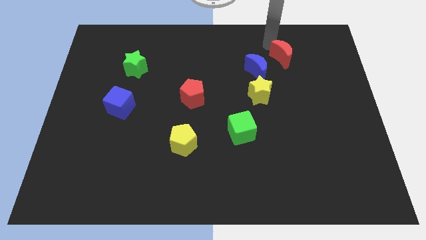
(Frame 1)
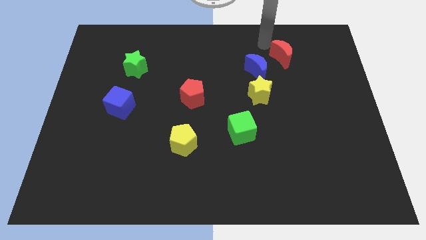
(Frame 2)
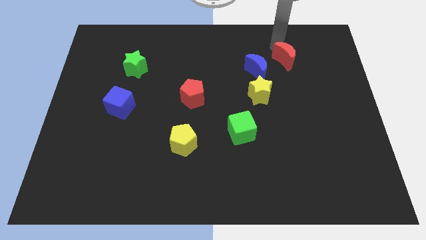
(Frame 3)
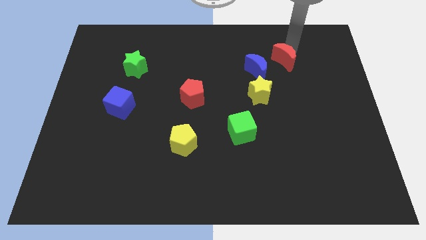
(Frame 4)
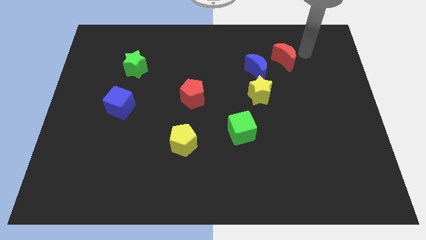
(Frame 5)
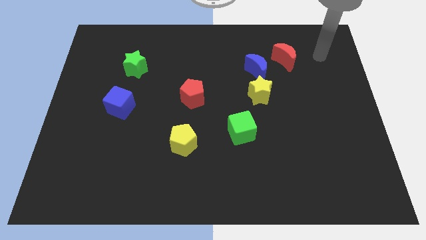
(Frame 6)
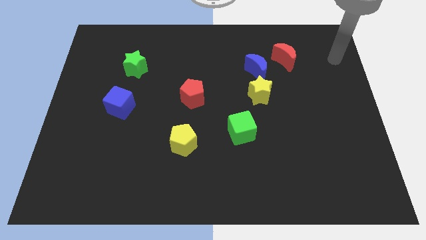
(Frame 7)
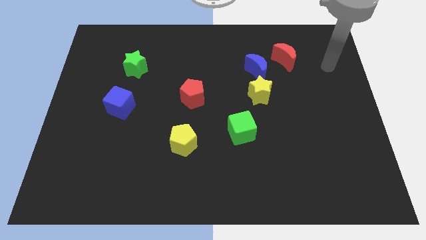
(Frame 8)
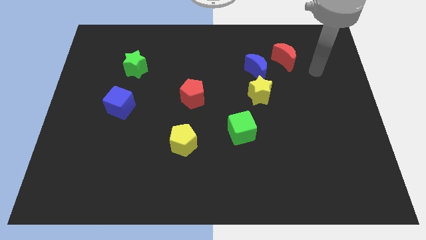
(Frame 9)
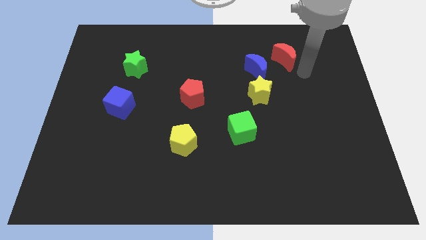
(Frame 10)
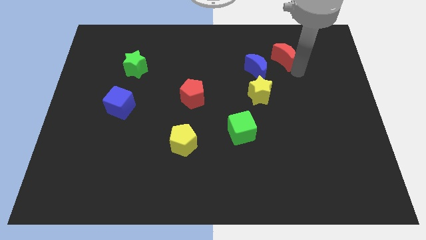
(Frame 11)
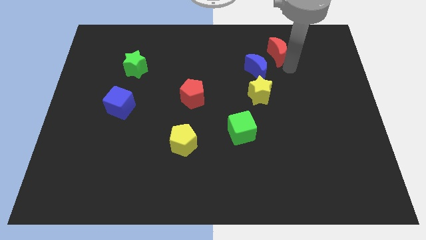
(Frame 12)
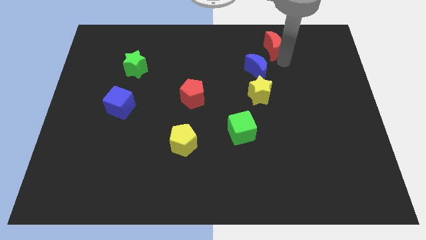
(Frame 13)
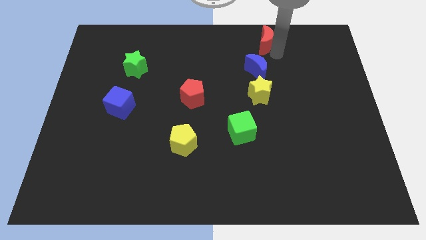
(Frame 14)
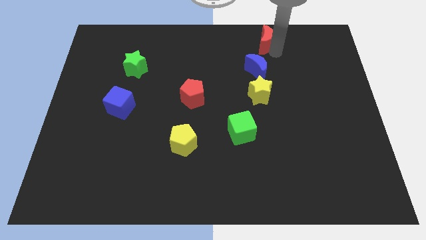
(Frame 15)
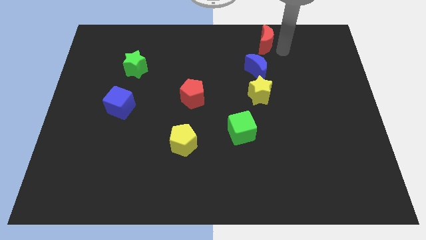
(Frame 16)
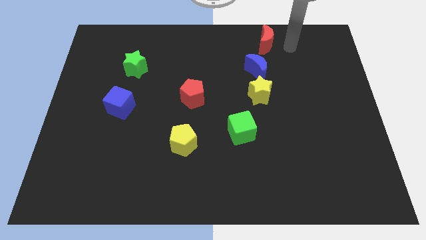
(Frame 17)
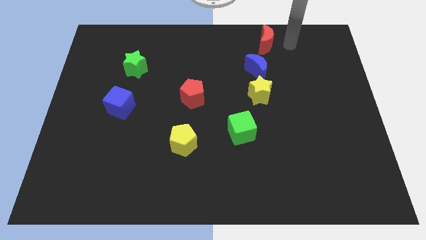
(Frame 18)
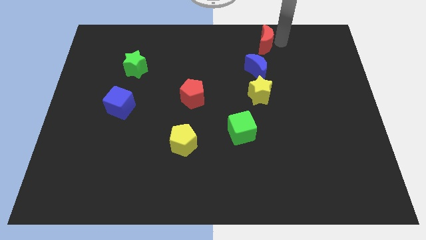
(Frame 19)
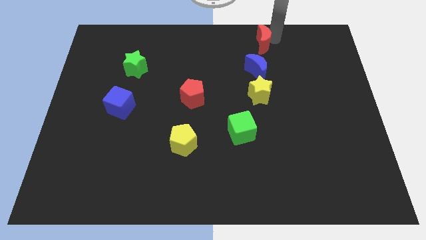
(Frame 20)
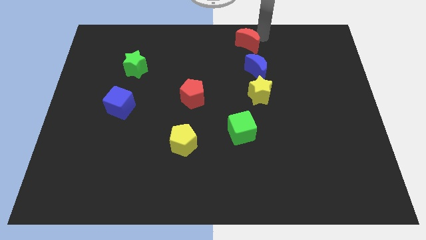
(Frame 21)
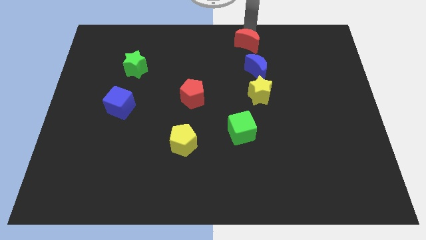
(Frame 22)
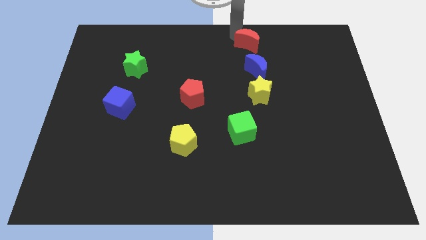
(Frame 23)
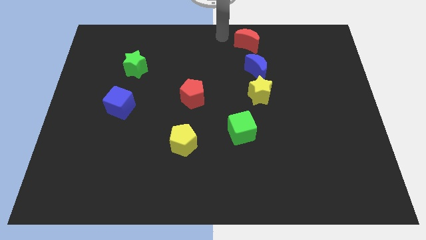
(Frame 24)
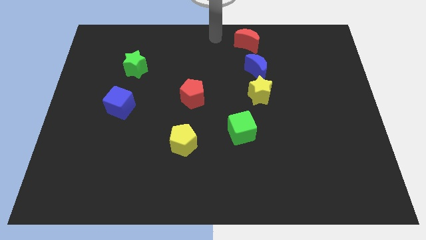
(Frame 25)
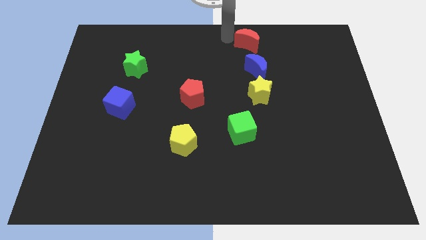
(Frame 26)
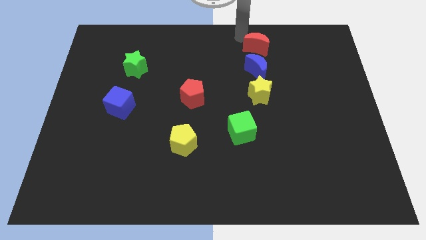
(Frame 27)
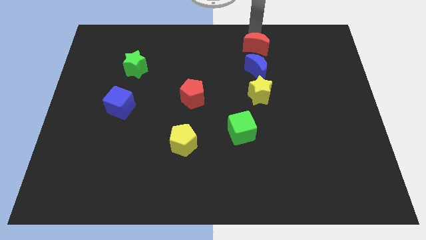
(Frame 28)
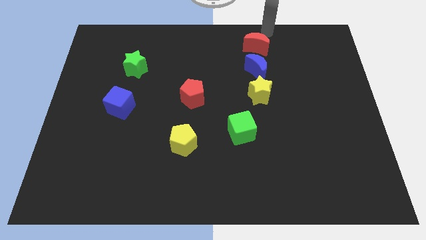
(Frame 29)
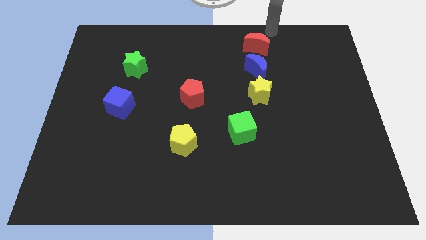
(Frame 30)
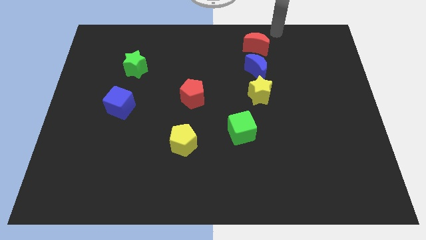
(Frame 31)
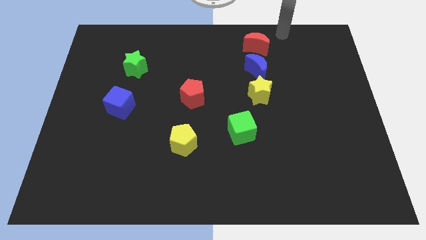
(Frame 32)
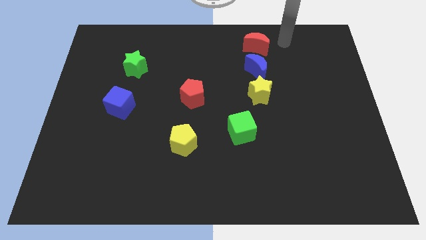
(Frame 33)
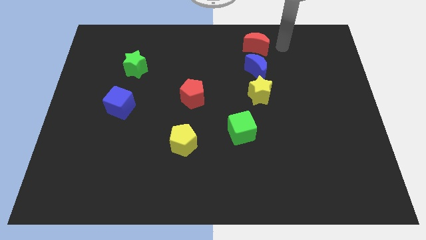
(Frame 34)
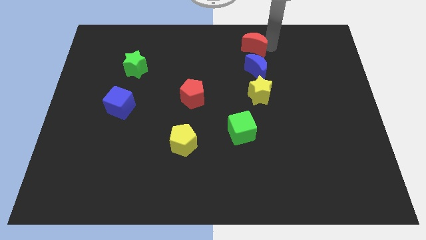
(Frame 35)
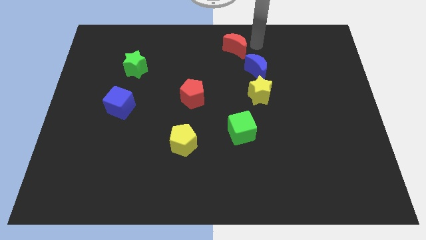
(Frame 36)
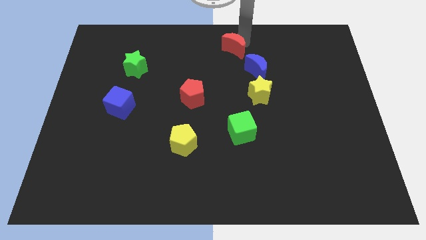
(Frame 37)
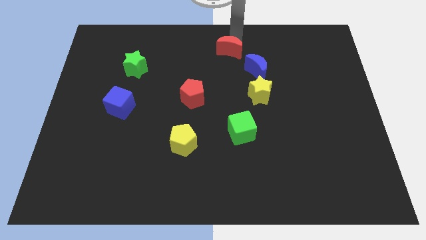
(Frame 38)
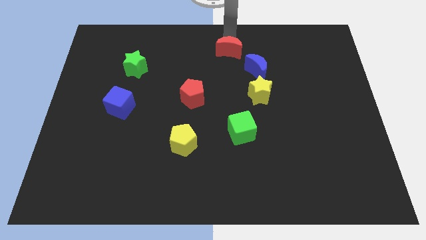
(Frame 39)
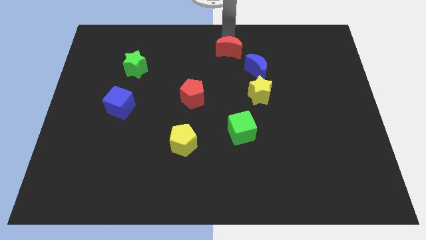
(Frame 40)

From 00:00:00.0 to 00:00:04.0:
place the red crescent at the top left side of blue crescent

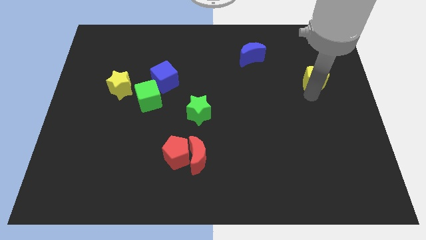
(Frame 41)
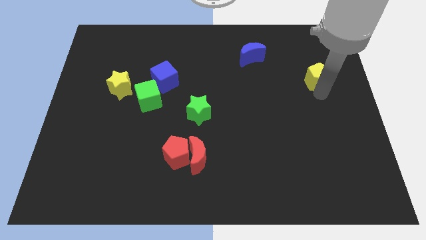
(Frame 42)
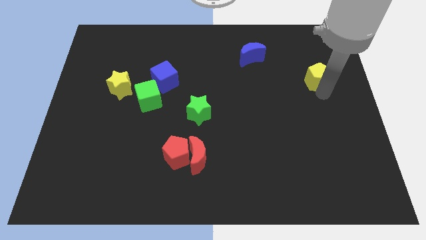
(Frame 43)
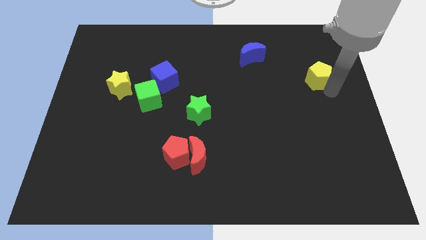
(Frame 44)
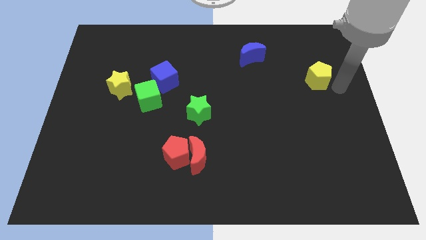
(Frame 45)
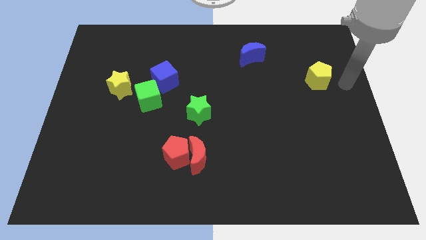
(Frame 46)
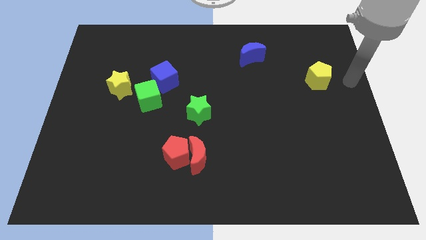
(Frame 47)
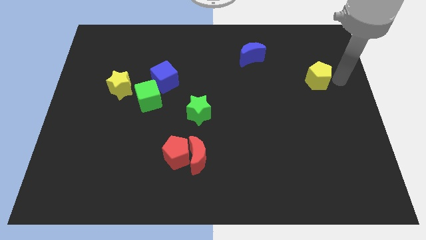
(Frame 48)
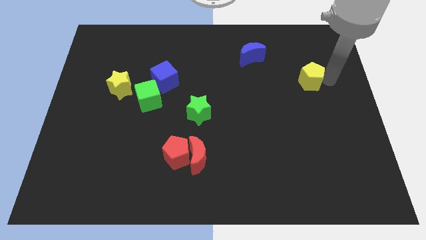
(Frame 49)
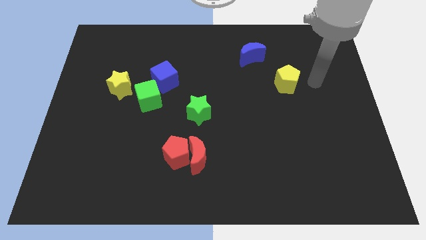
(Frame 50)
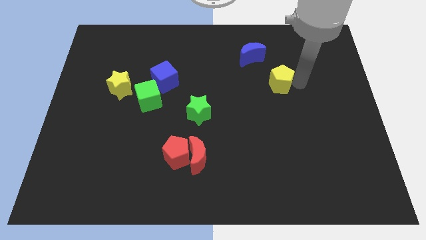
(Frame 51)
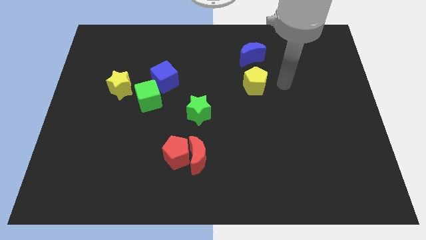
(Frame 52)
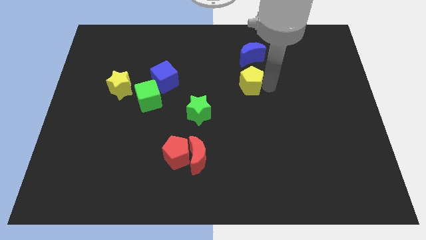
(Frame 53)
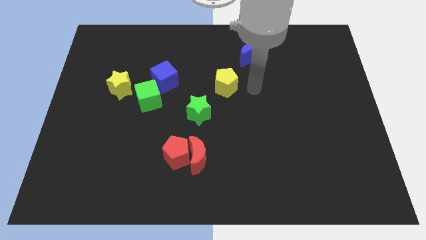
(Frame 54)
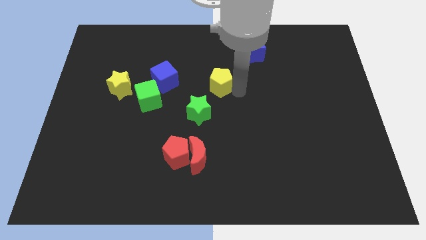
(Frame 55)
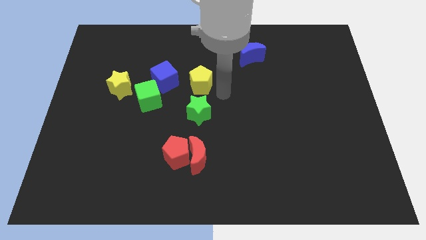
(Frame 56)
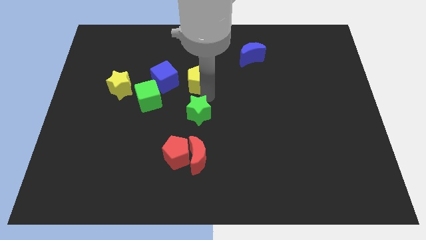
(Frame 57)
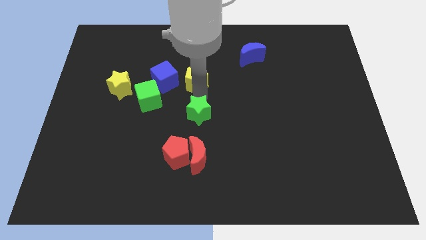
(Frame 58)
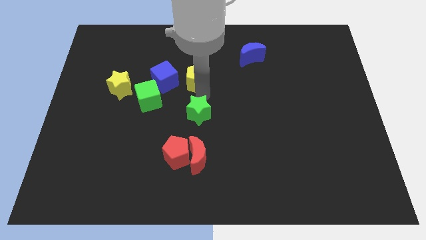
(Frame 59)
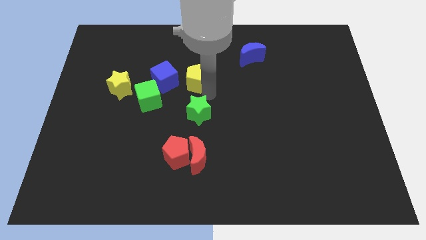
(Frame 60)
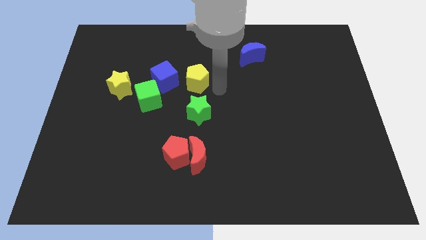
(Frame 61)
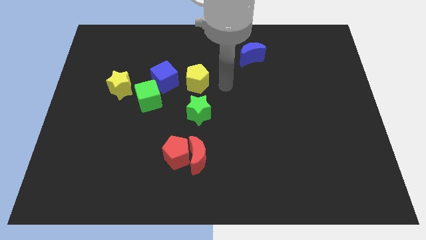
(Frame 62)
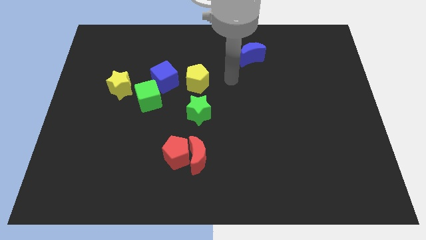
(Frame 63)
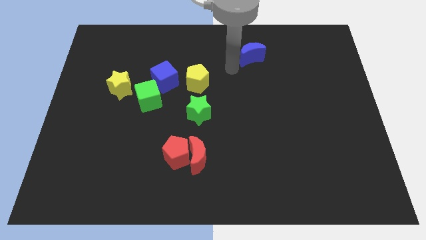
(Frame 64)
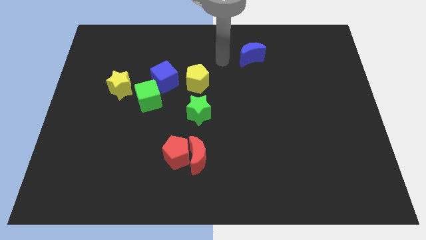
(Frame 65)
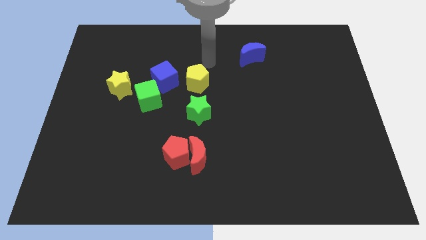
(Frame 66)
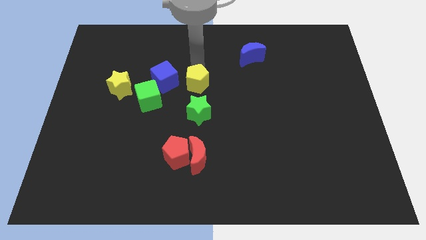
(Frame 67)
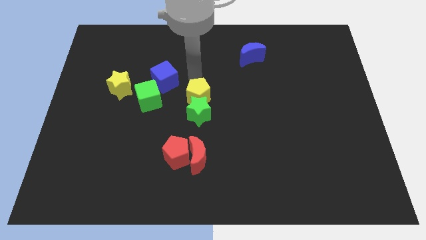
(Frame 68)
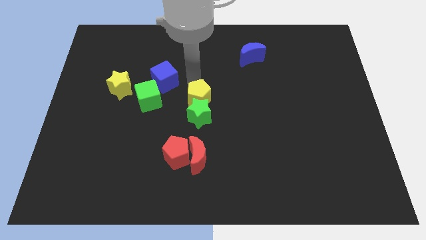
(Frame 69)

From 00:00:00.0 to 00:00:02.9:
place the yellow pentagon at the center of the board

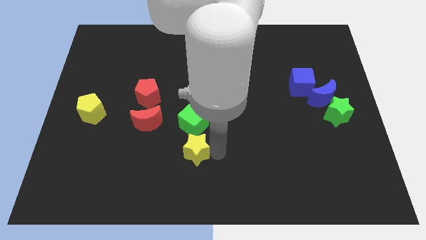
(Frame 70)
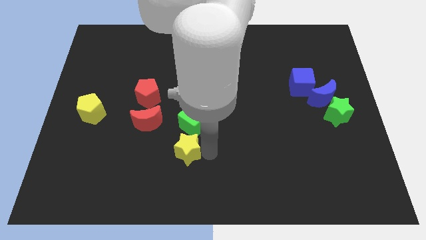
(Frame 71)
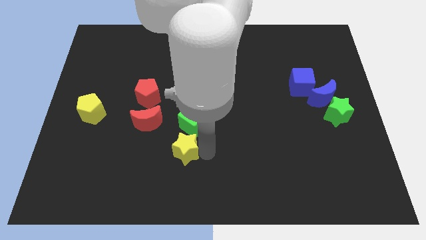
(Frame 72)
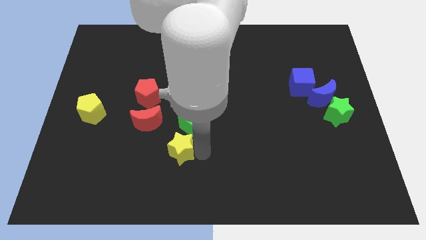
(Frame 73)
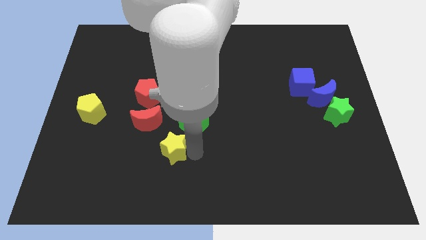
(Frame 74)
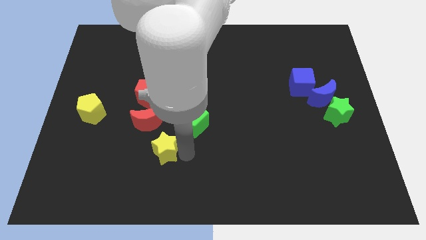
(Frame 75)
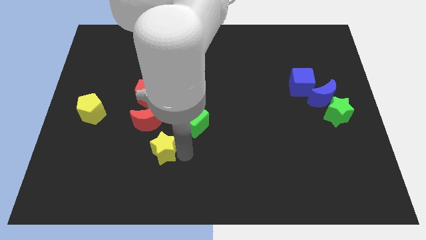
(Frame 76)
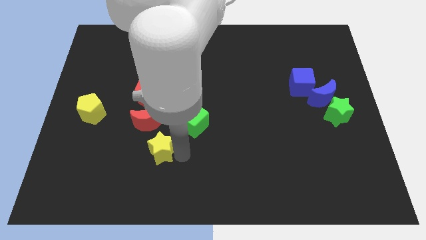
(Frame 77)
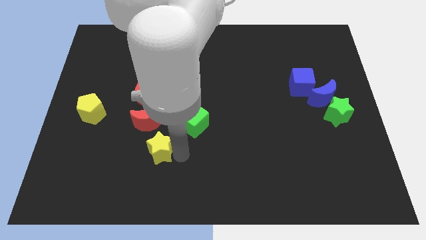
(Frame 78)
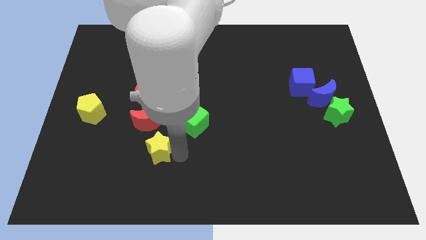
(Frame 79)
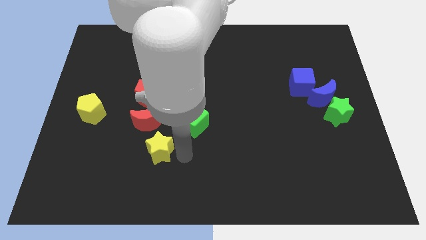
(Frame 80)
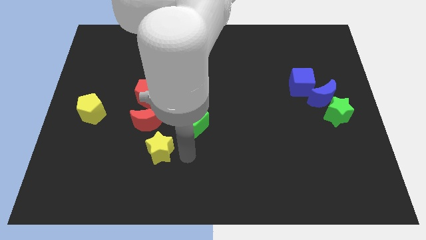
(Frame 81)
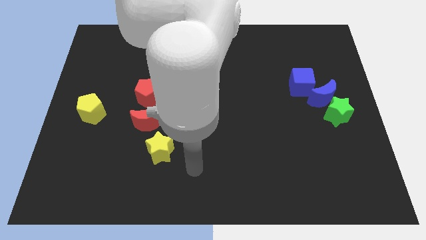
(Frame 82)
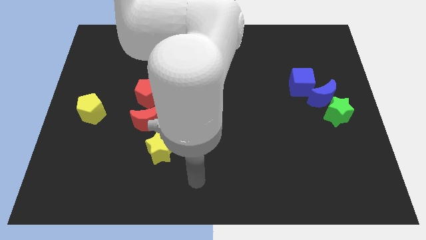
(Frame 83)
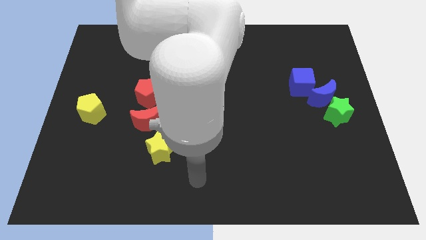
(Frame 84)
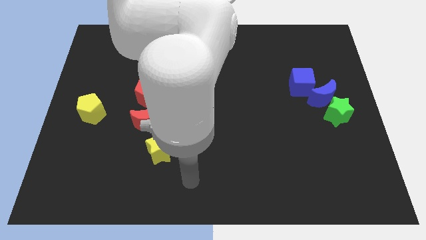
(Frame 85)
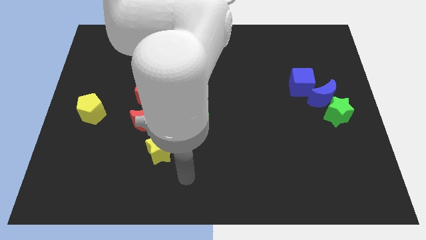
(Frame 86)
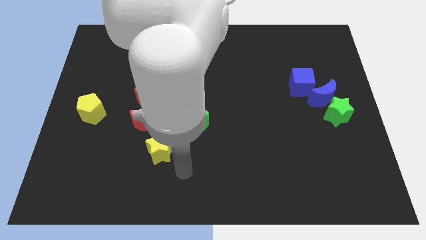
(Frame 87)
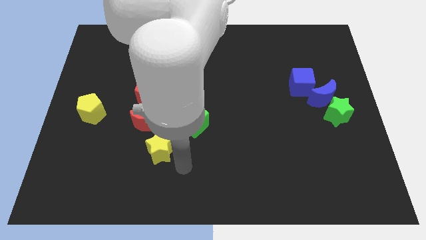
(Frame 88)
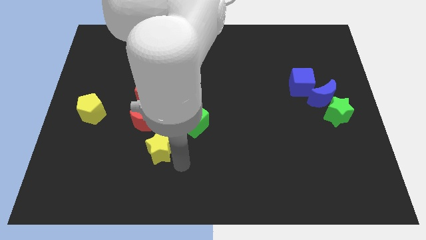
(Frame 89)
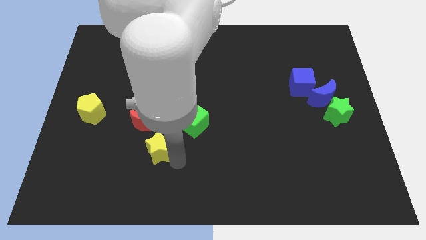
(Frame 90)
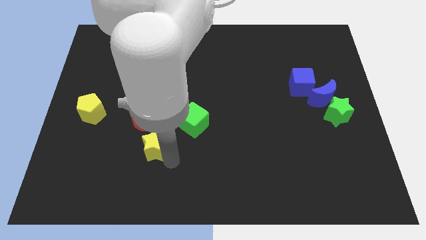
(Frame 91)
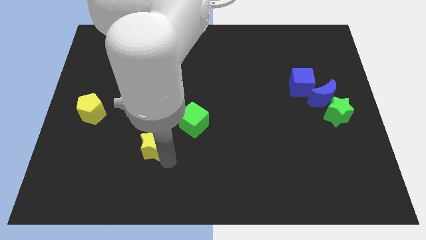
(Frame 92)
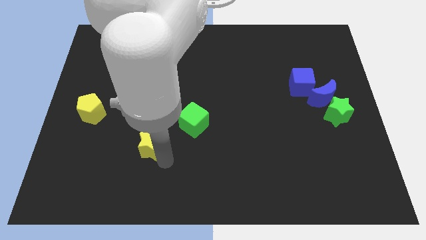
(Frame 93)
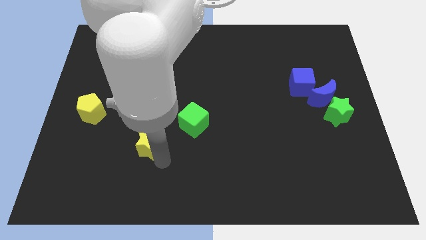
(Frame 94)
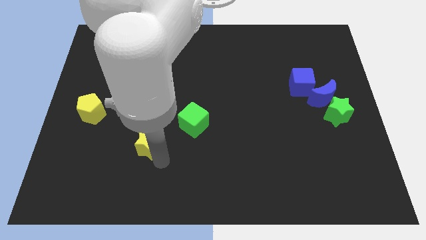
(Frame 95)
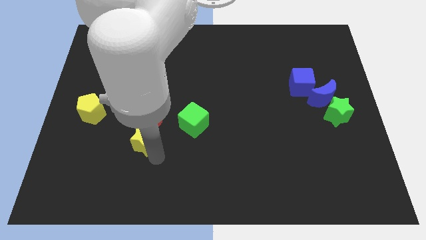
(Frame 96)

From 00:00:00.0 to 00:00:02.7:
add the yellow star to the vertical line of the red blocks
